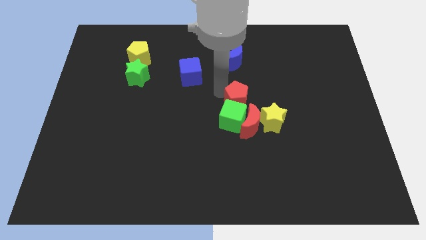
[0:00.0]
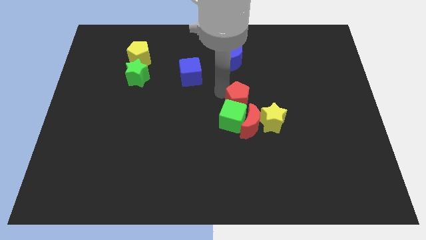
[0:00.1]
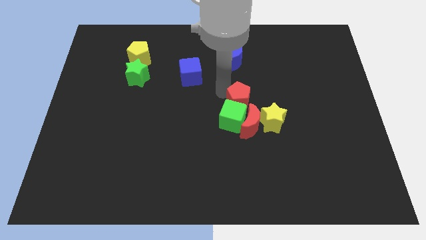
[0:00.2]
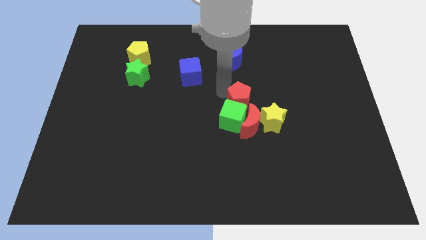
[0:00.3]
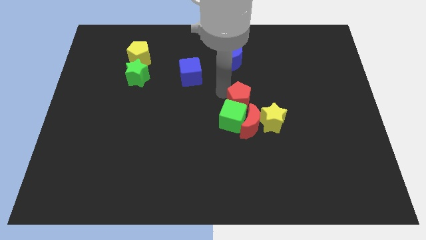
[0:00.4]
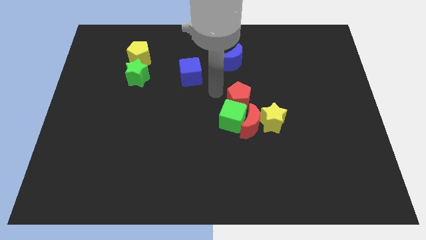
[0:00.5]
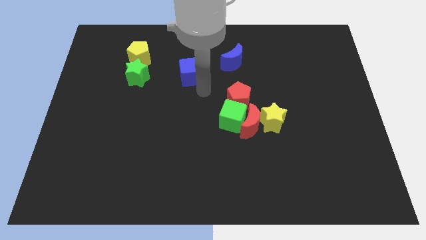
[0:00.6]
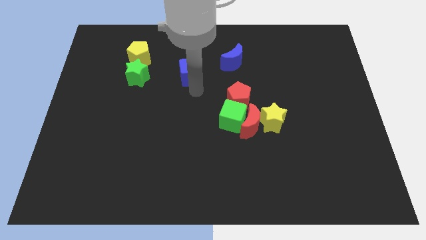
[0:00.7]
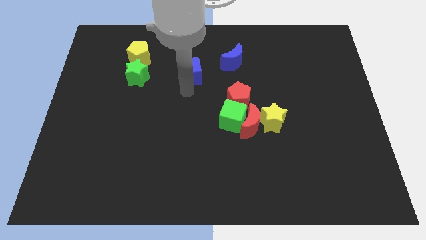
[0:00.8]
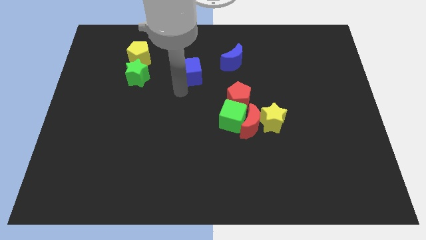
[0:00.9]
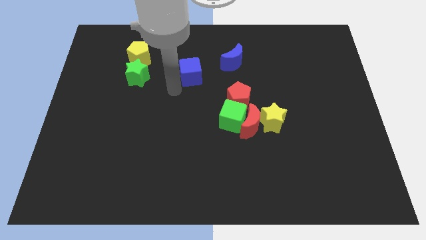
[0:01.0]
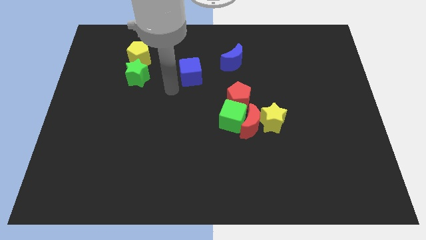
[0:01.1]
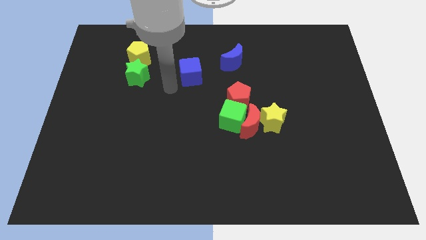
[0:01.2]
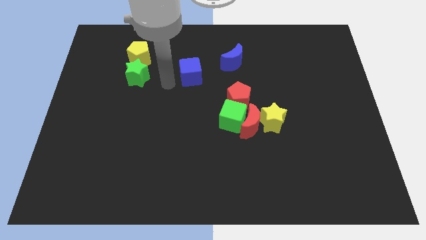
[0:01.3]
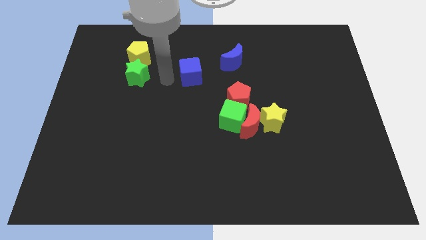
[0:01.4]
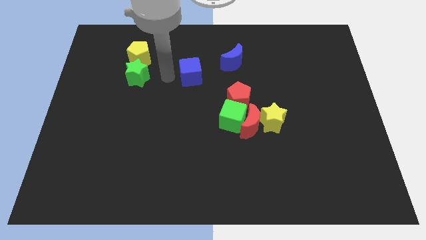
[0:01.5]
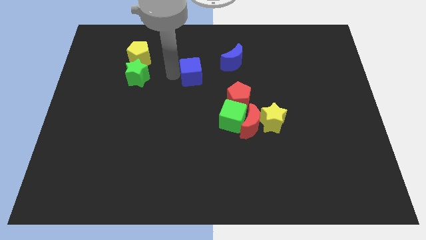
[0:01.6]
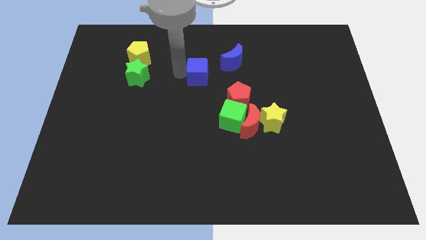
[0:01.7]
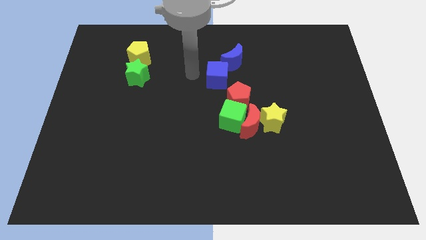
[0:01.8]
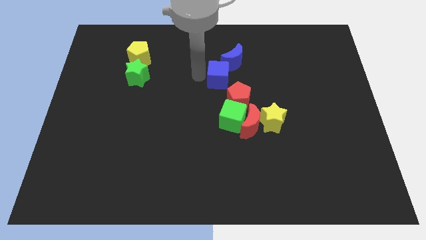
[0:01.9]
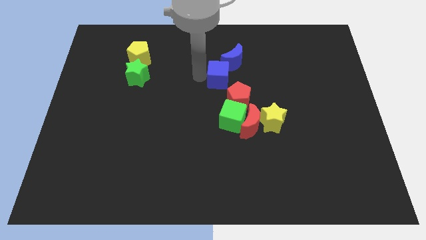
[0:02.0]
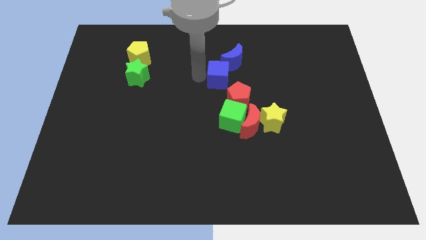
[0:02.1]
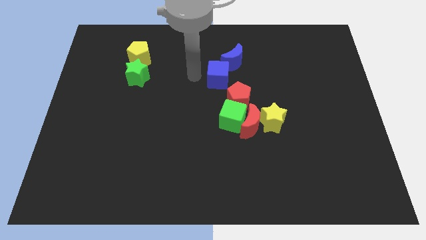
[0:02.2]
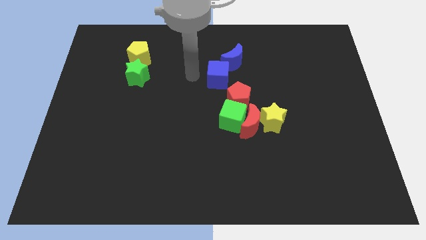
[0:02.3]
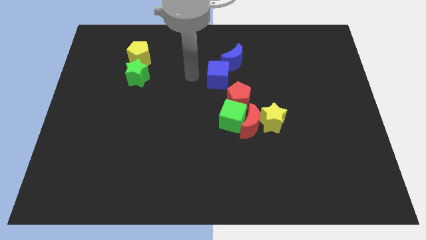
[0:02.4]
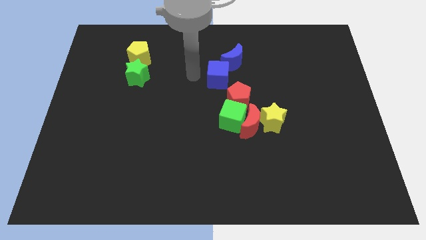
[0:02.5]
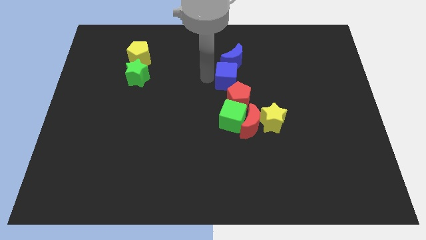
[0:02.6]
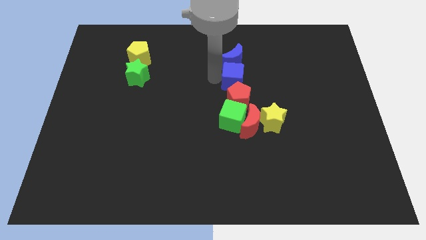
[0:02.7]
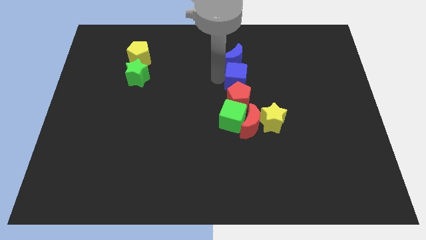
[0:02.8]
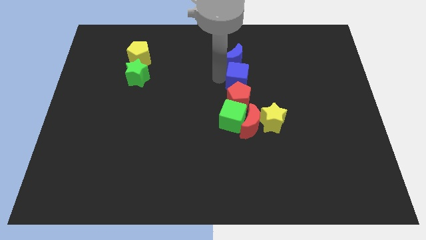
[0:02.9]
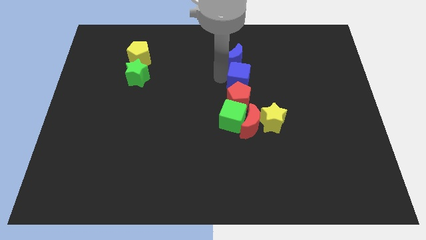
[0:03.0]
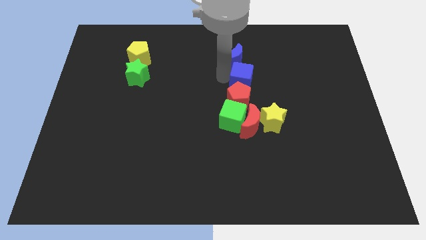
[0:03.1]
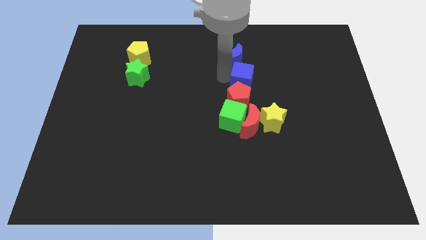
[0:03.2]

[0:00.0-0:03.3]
move the blue cube to the centre of red pentagon and blue crescent

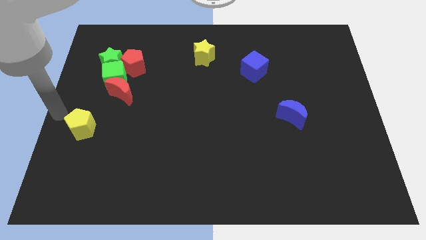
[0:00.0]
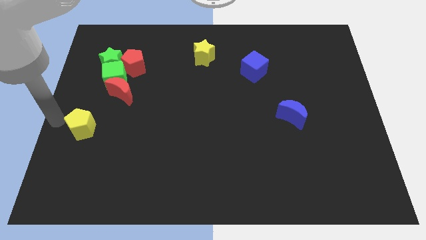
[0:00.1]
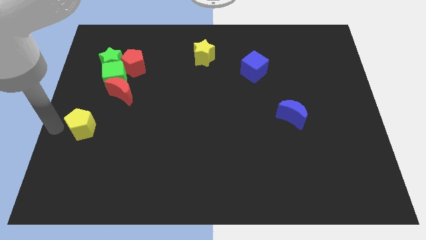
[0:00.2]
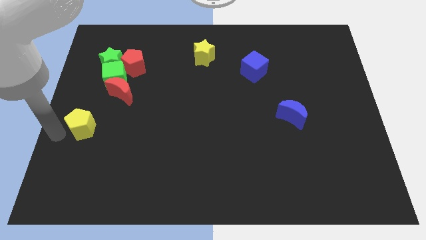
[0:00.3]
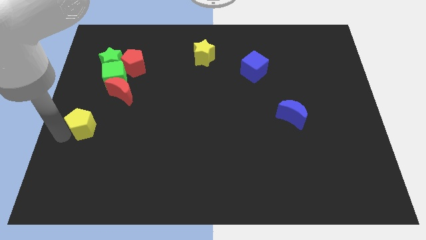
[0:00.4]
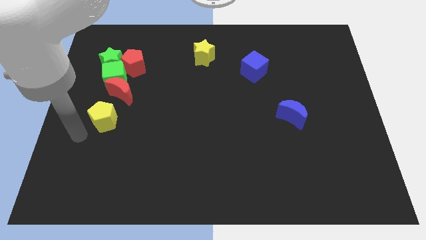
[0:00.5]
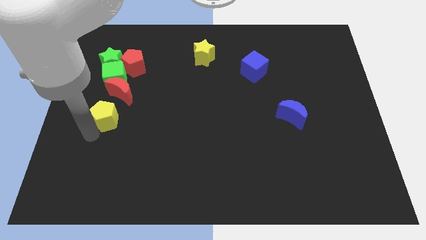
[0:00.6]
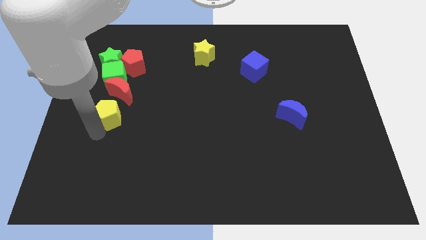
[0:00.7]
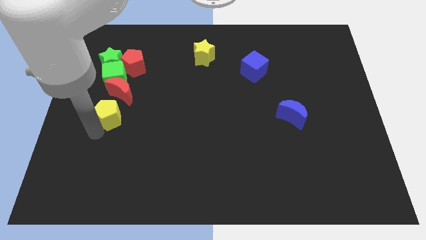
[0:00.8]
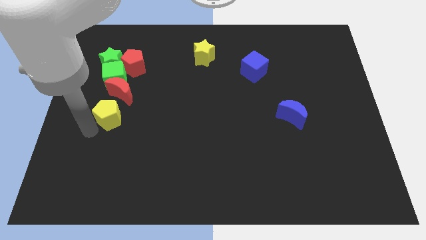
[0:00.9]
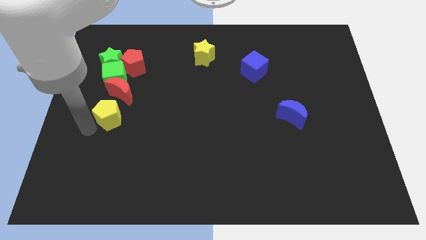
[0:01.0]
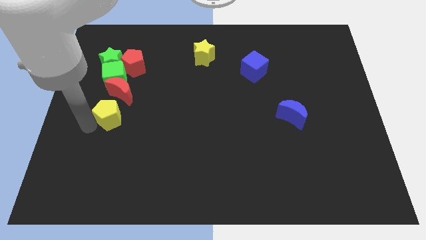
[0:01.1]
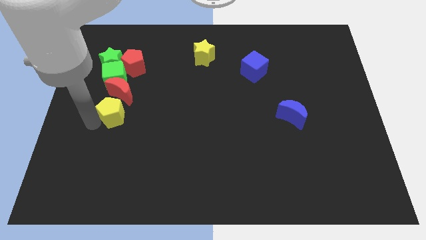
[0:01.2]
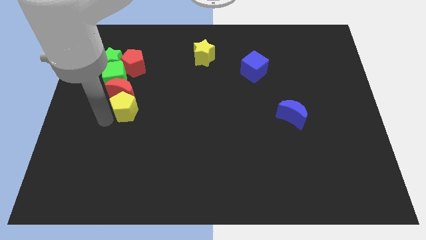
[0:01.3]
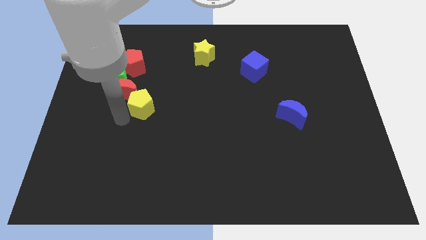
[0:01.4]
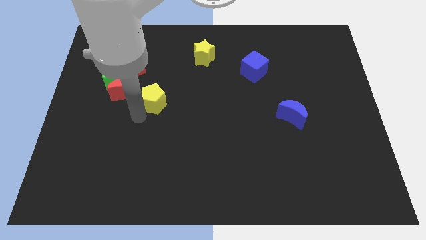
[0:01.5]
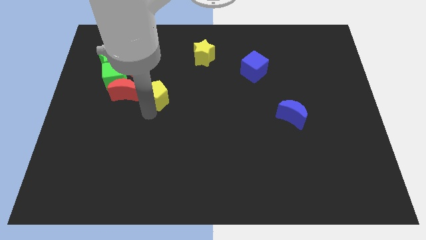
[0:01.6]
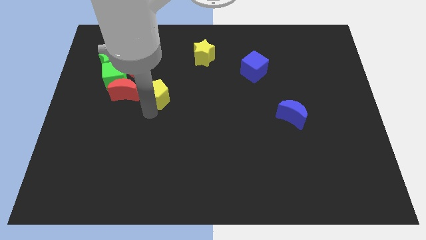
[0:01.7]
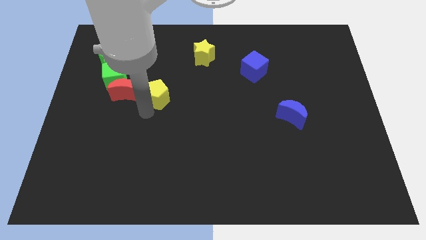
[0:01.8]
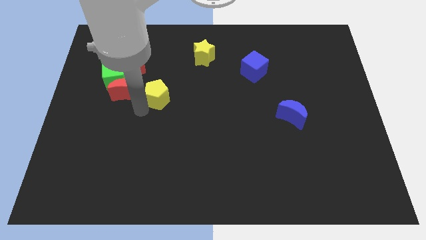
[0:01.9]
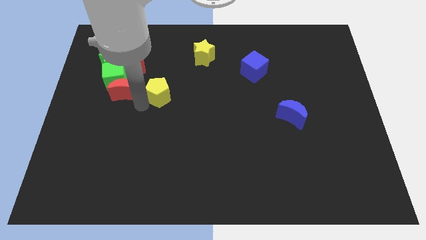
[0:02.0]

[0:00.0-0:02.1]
push yellow pentagon to the right of red crescent

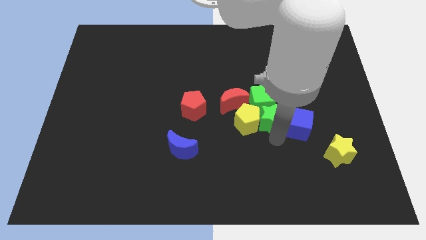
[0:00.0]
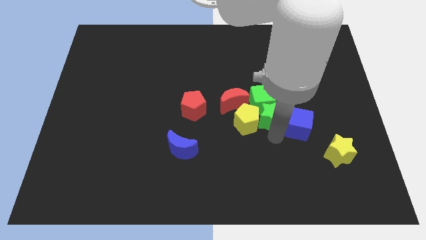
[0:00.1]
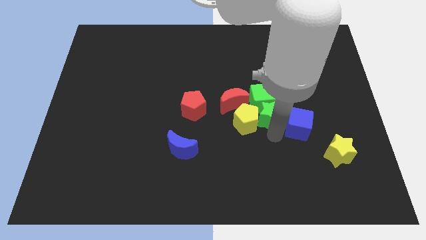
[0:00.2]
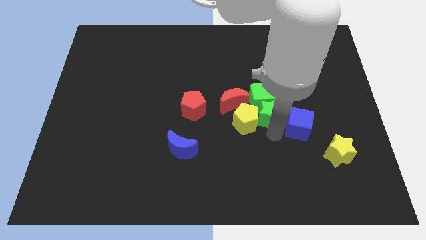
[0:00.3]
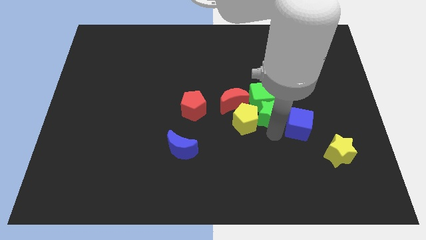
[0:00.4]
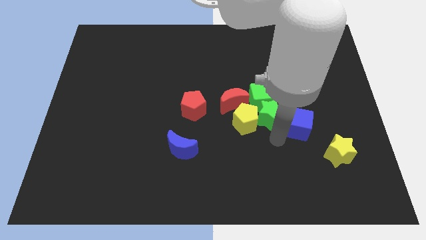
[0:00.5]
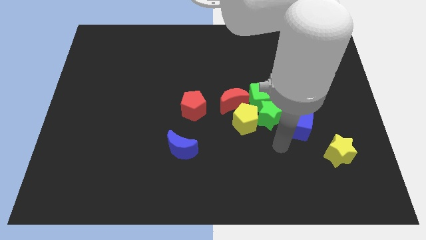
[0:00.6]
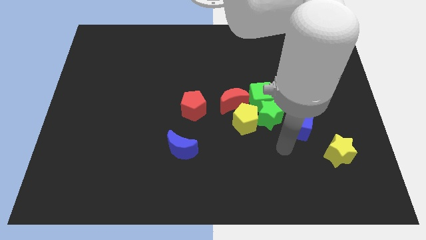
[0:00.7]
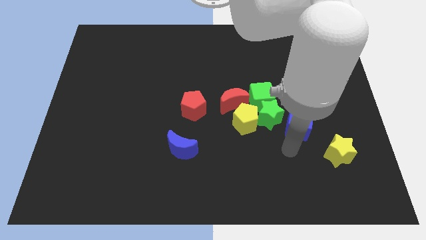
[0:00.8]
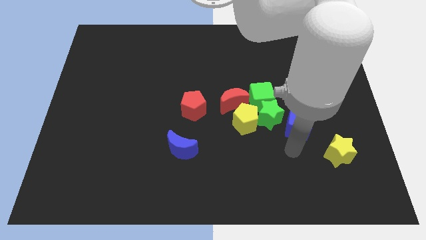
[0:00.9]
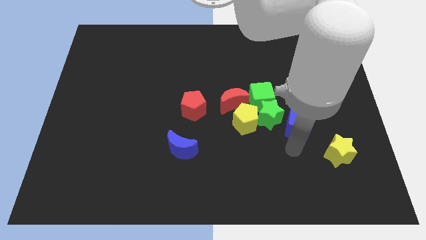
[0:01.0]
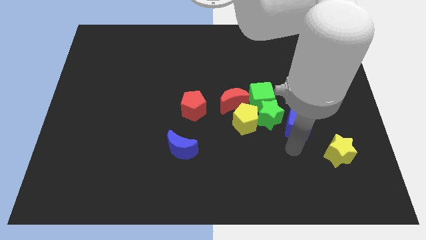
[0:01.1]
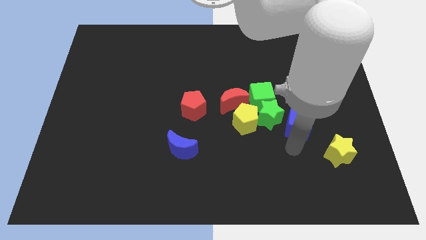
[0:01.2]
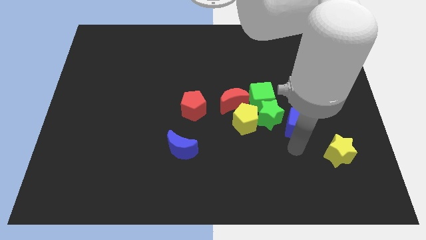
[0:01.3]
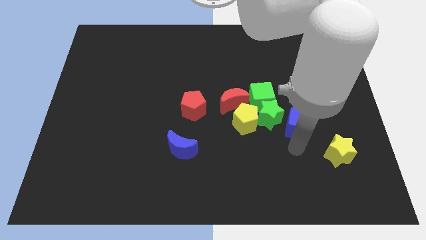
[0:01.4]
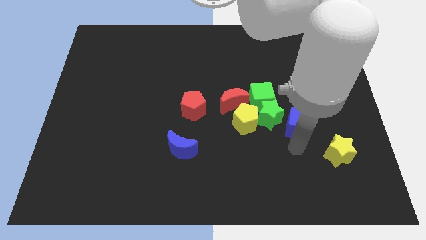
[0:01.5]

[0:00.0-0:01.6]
place your arm below blue cube

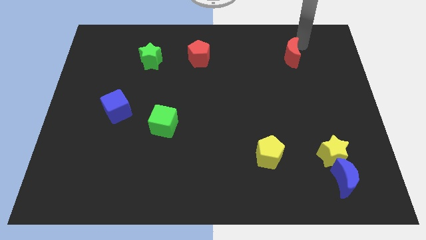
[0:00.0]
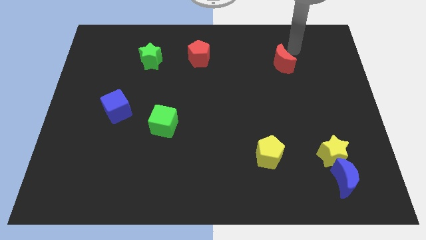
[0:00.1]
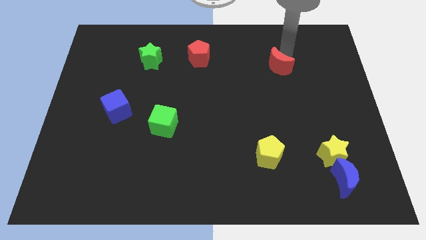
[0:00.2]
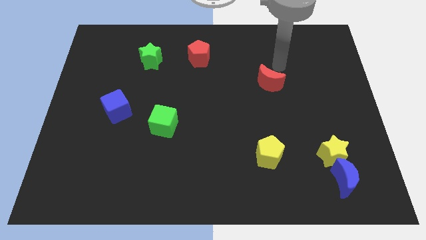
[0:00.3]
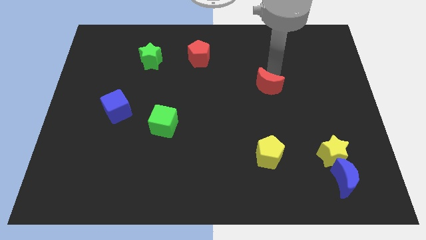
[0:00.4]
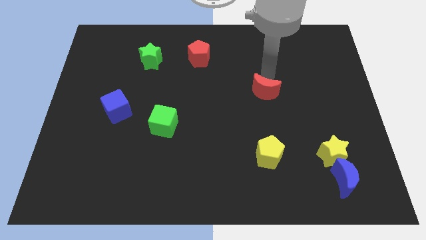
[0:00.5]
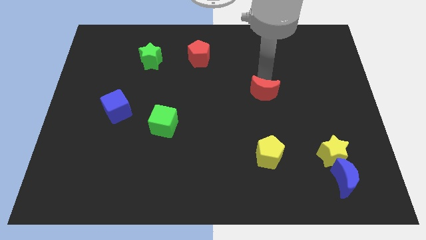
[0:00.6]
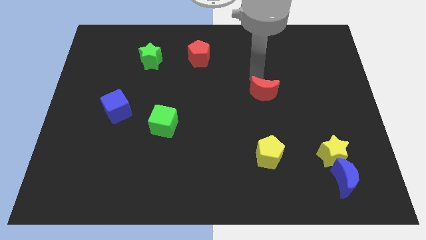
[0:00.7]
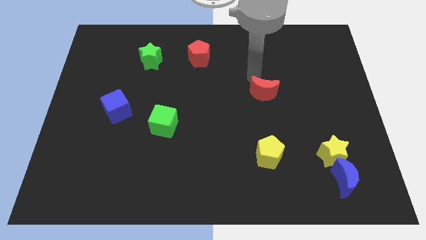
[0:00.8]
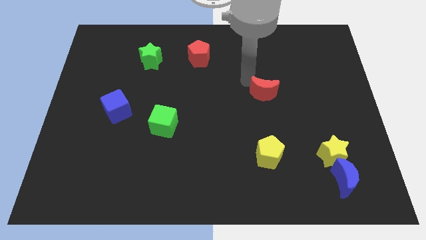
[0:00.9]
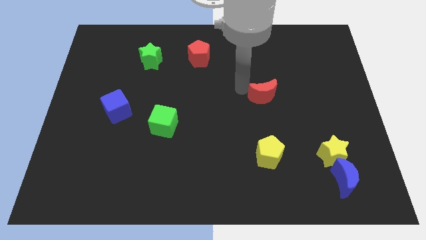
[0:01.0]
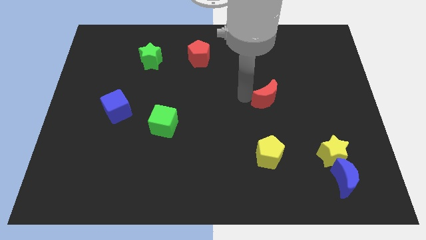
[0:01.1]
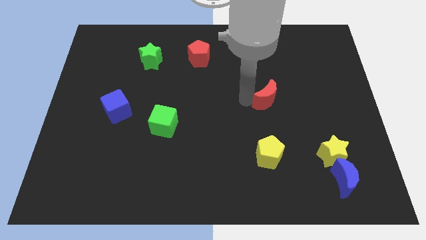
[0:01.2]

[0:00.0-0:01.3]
place the red crescent above the yellow pentagon

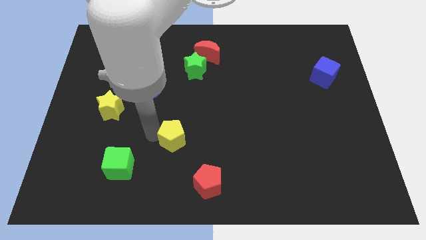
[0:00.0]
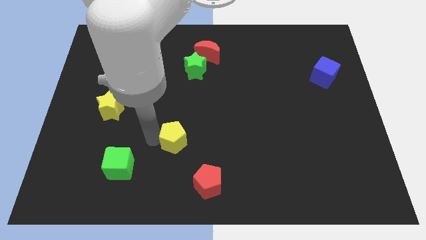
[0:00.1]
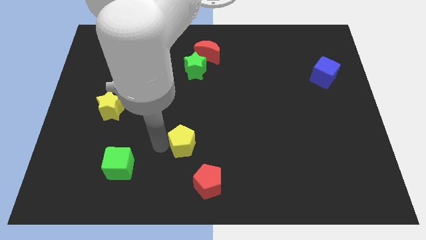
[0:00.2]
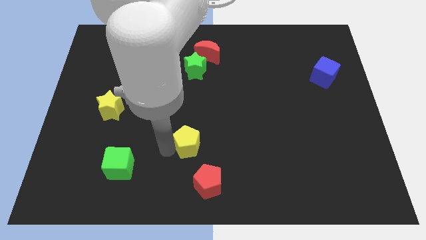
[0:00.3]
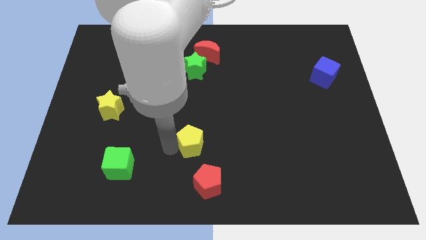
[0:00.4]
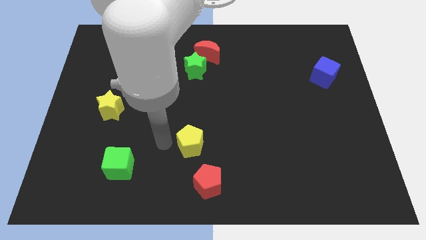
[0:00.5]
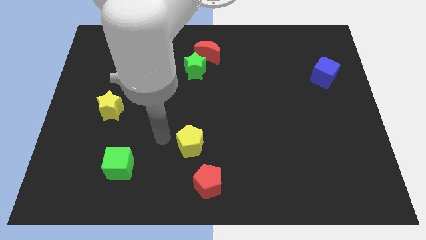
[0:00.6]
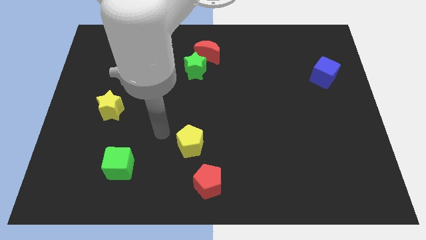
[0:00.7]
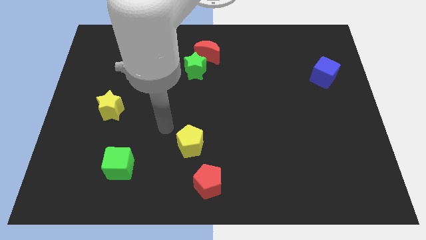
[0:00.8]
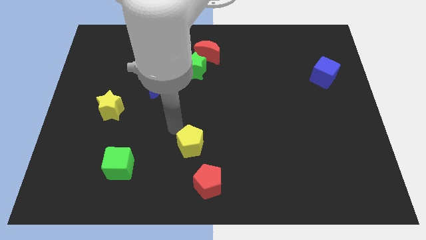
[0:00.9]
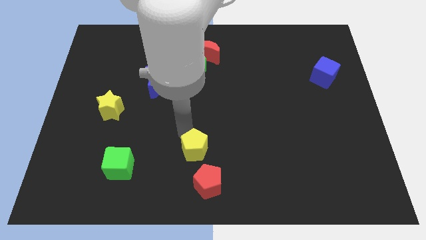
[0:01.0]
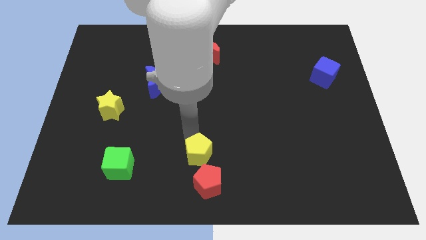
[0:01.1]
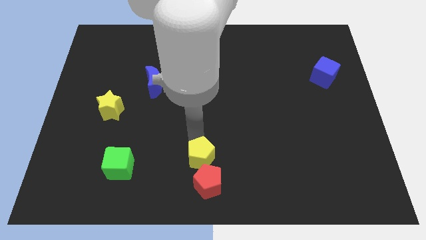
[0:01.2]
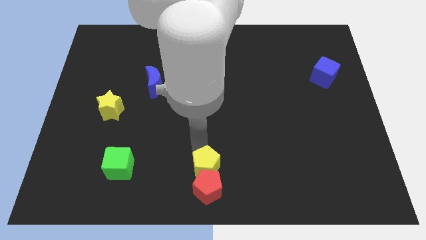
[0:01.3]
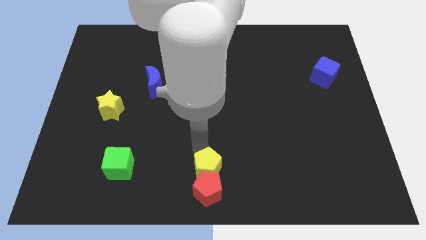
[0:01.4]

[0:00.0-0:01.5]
move the yellow pentagon horizontally on the right side of the green cube
